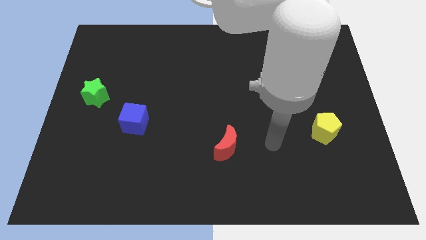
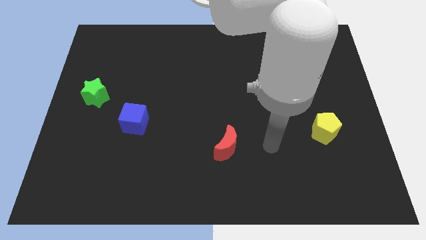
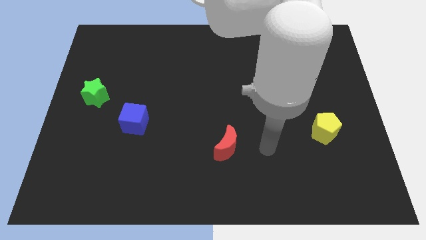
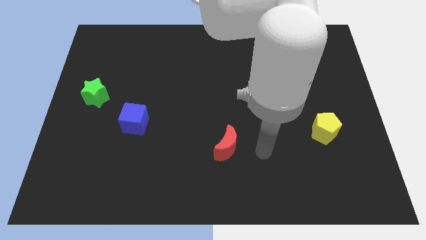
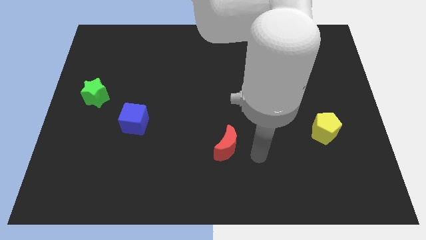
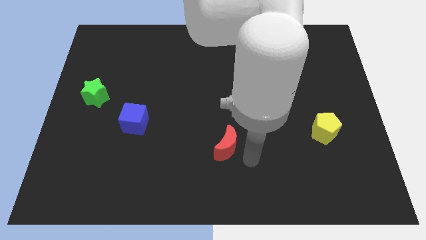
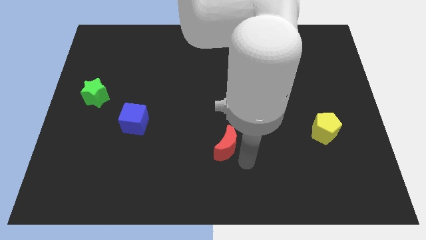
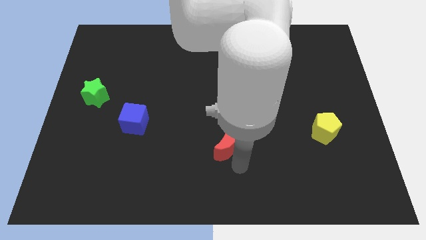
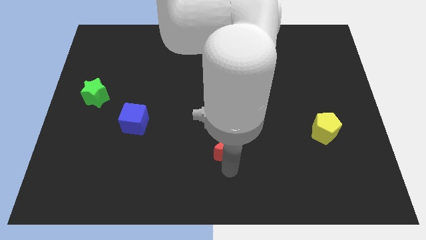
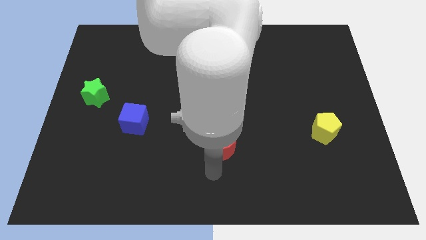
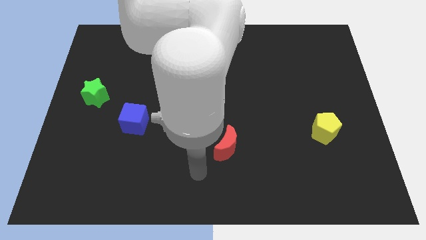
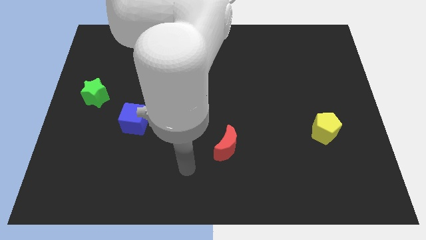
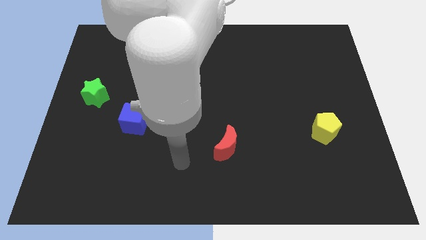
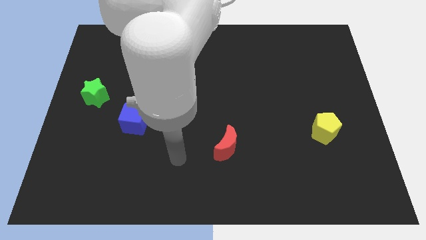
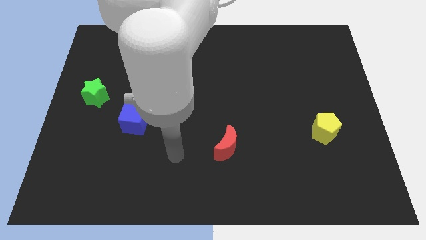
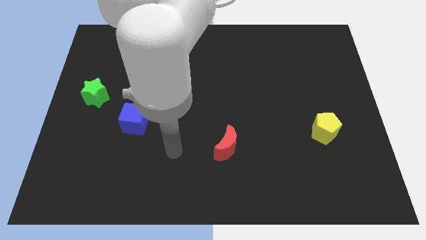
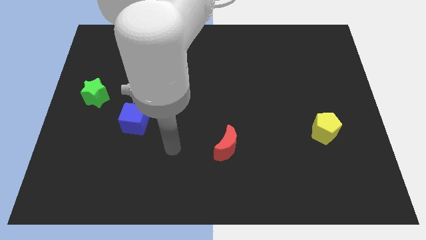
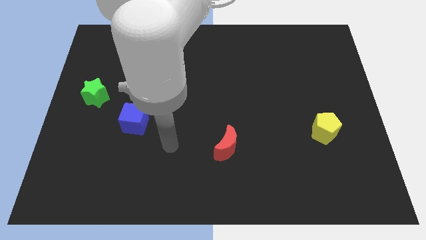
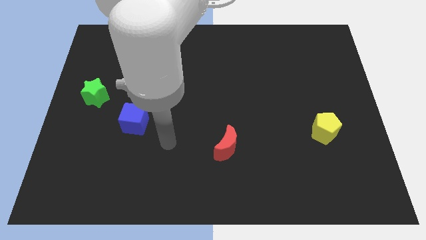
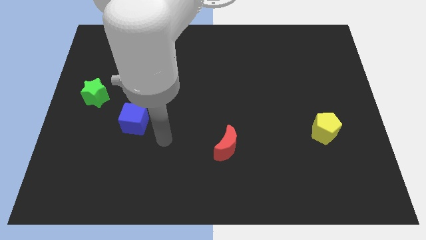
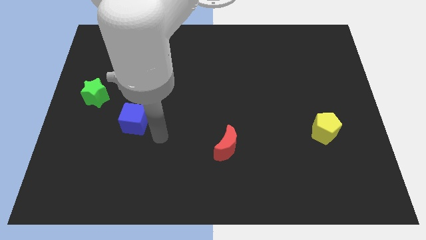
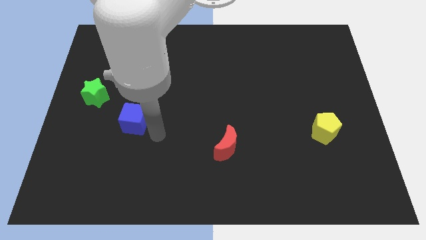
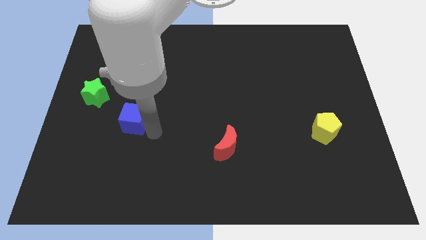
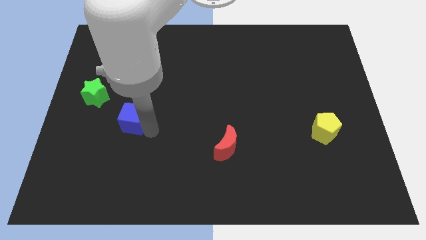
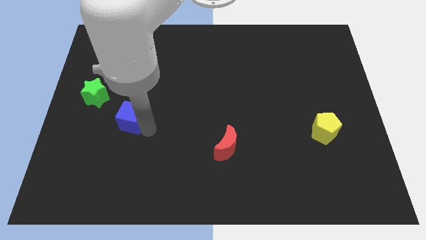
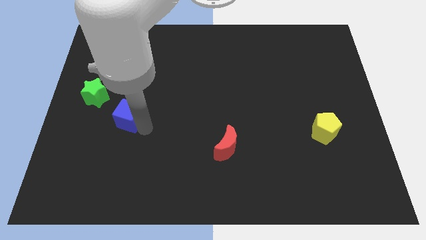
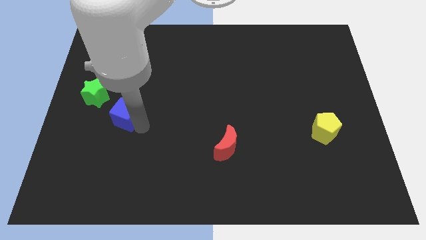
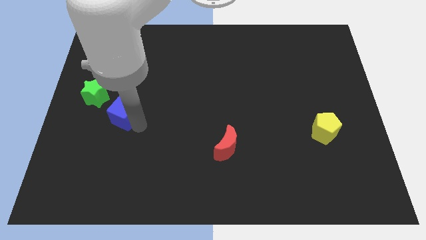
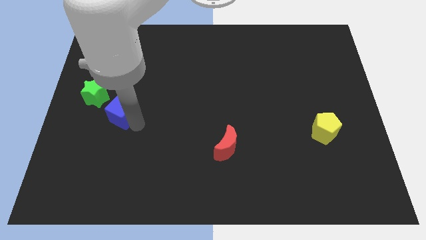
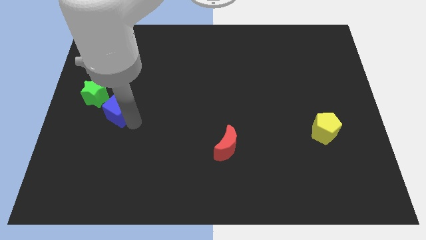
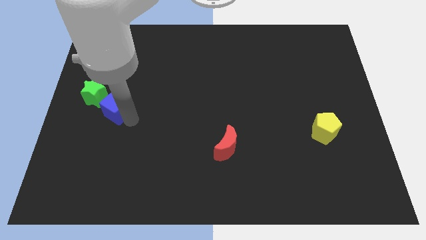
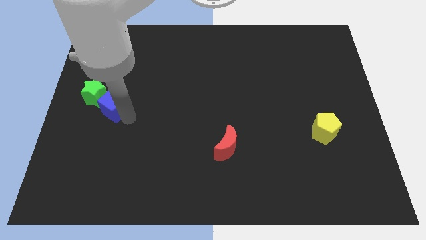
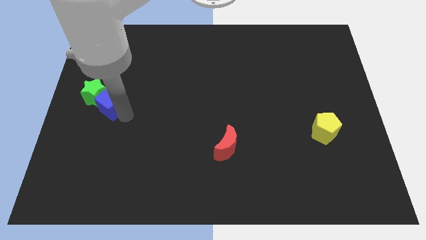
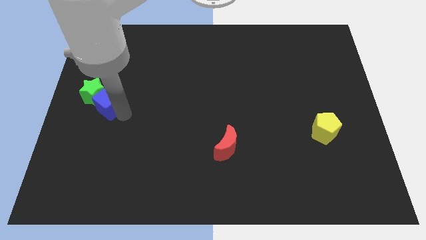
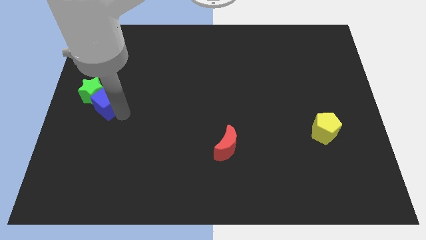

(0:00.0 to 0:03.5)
put the blue block to the star

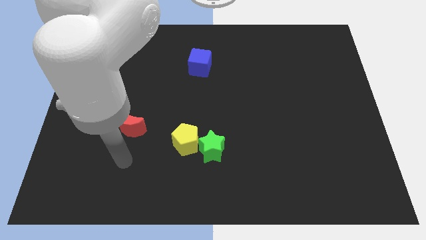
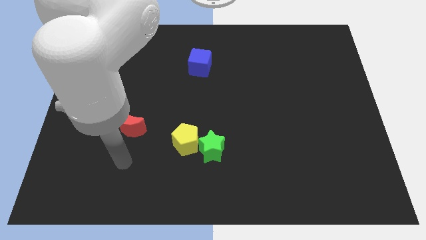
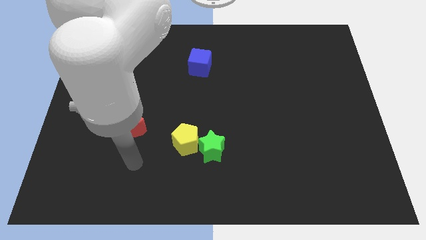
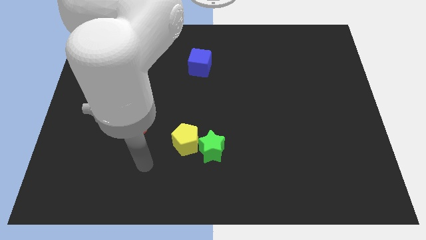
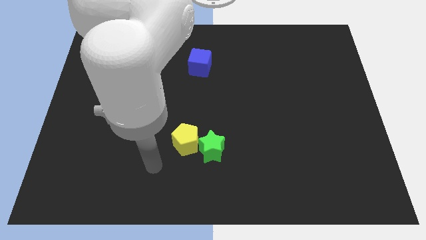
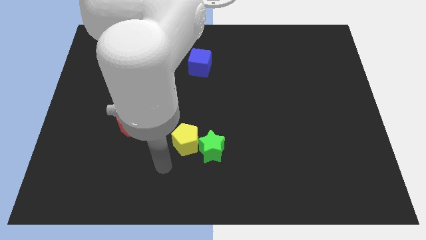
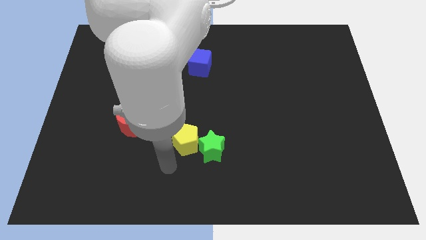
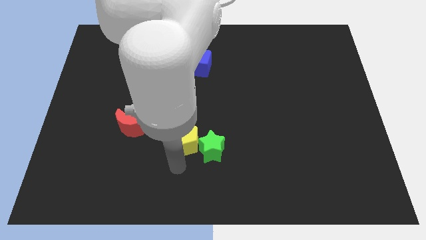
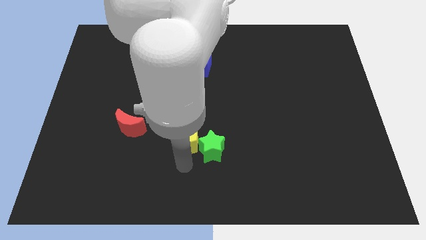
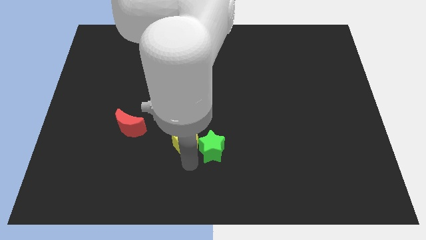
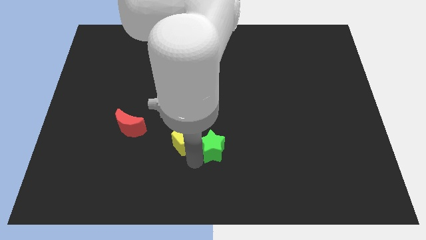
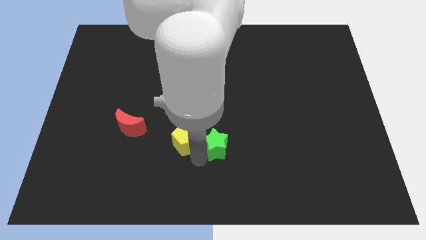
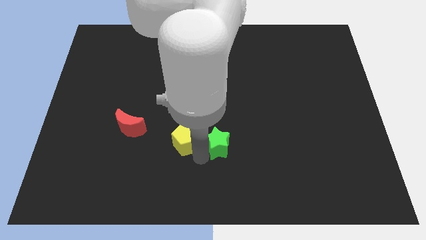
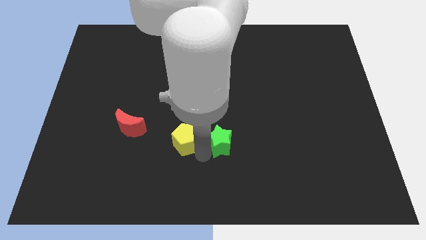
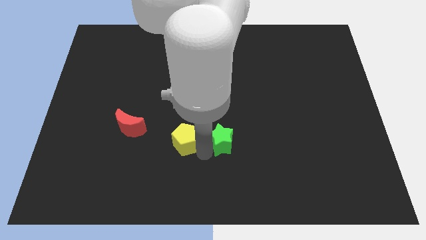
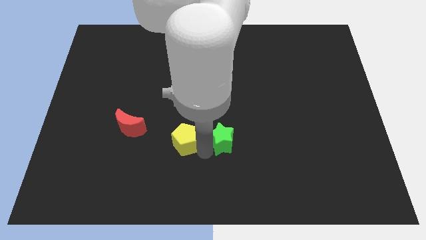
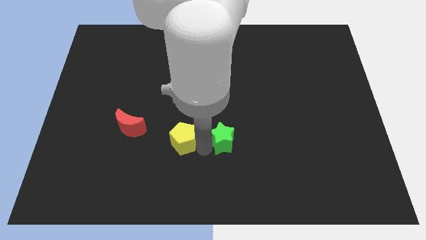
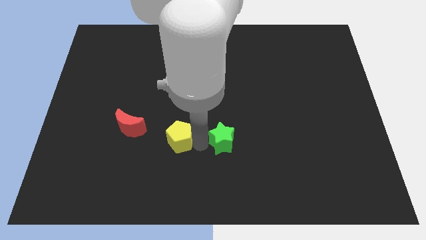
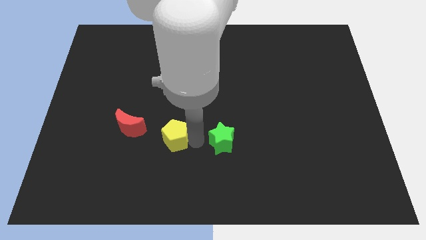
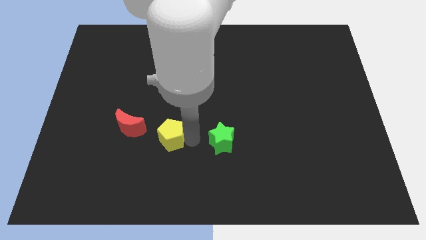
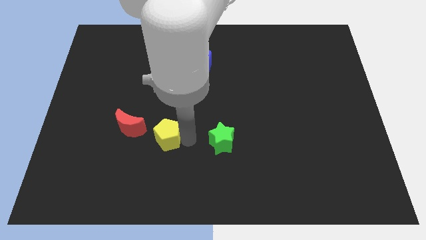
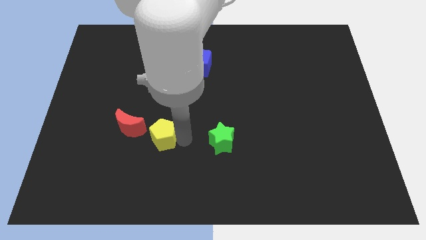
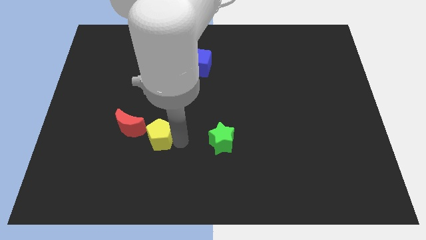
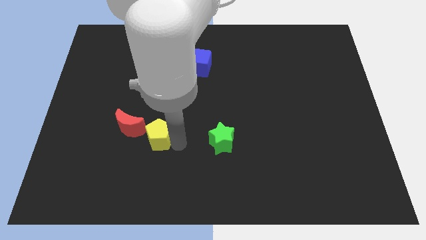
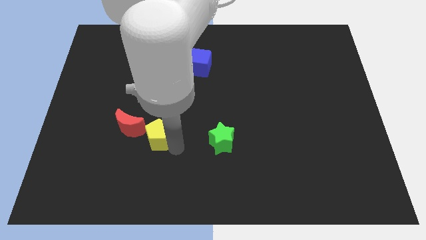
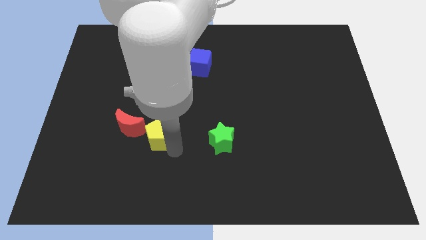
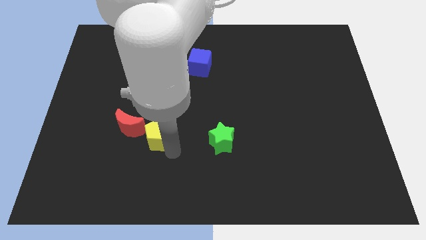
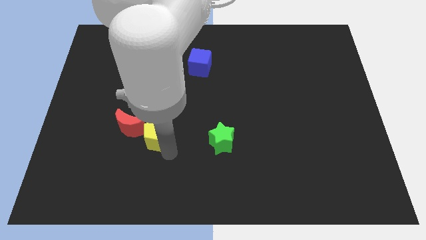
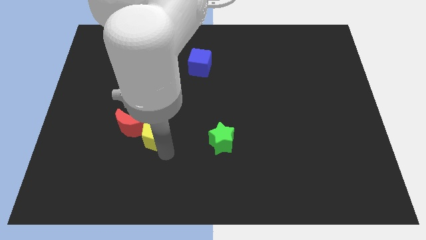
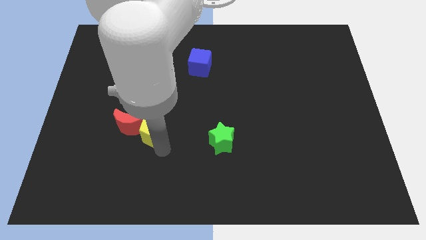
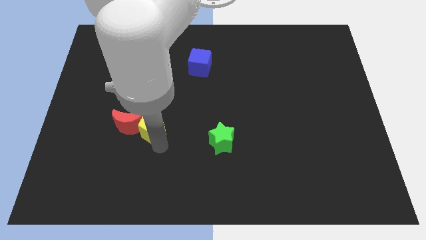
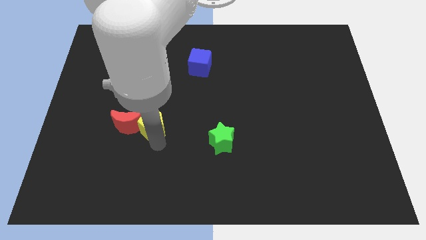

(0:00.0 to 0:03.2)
slide the pentagon next to the red moon

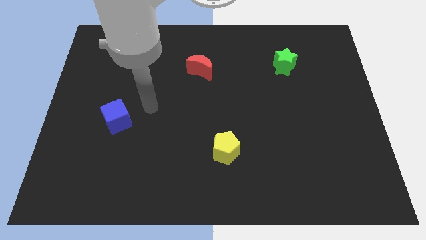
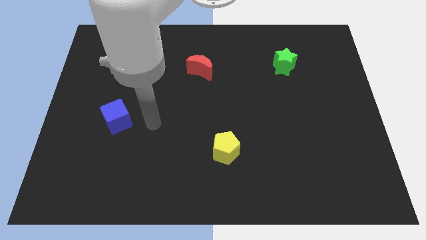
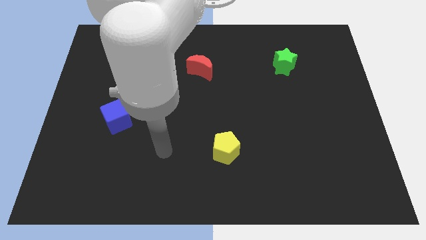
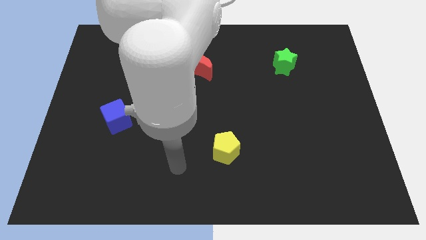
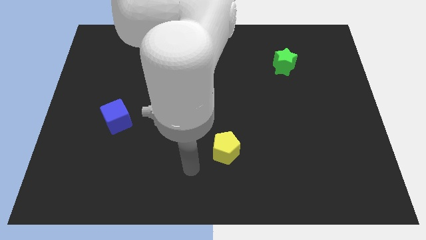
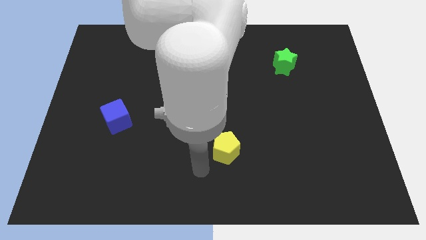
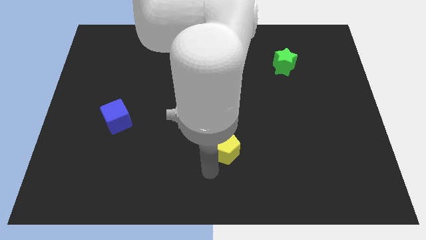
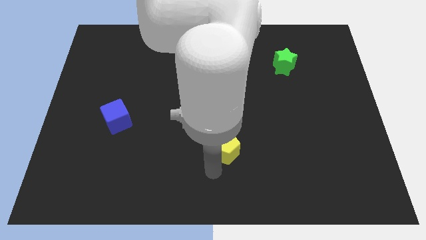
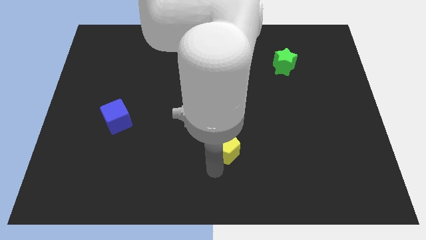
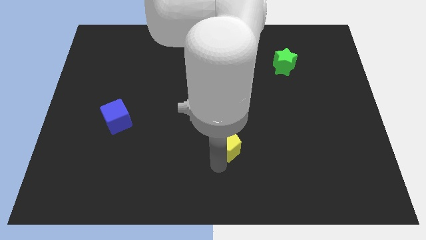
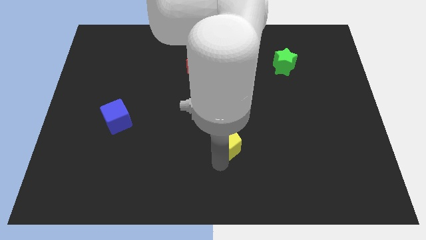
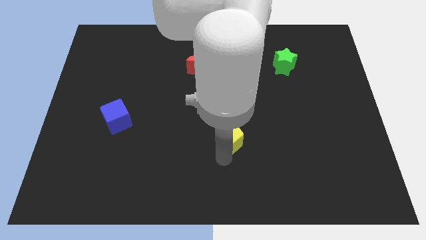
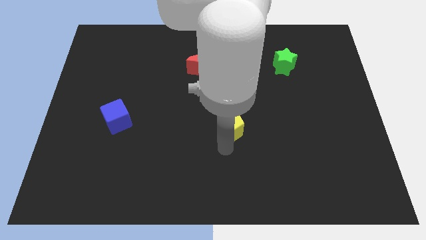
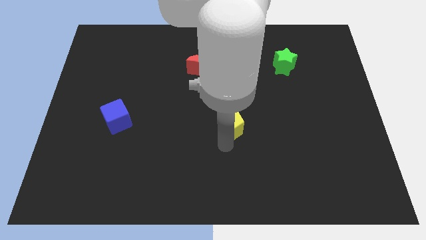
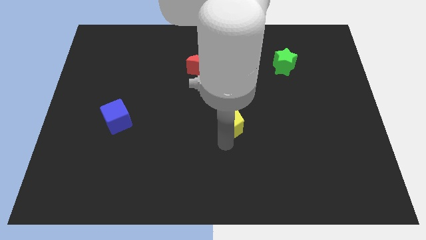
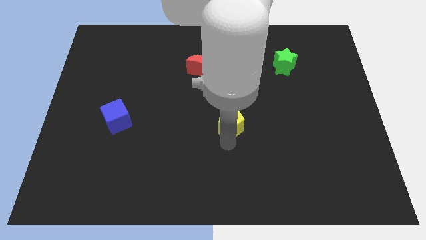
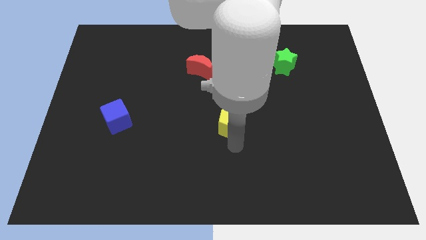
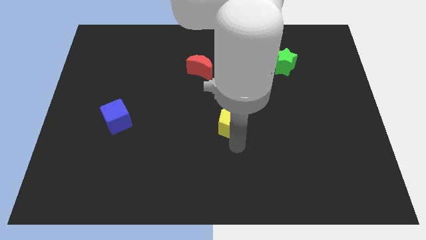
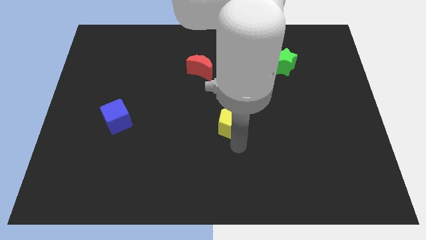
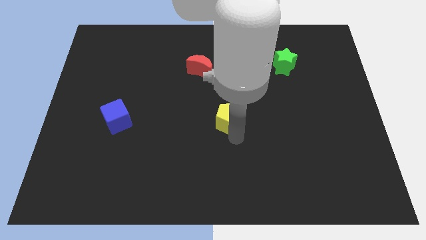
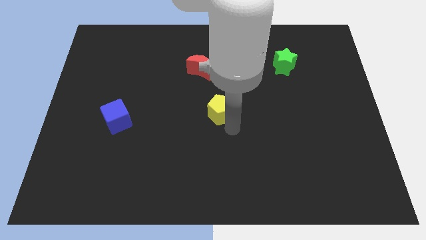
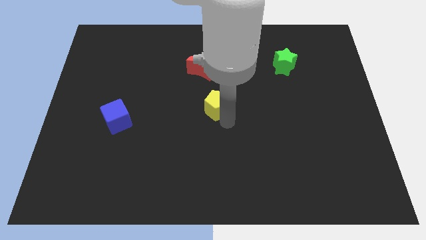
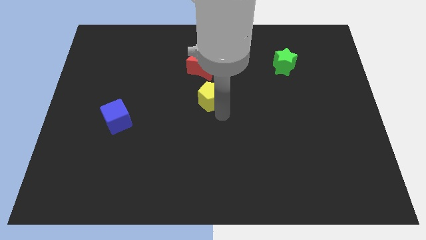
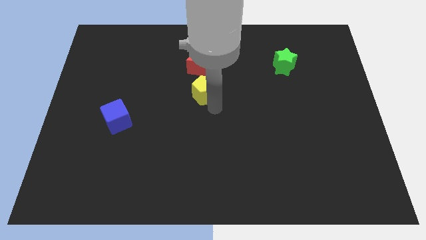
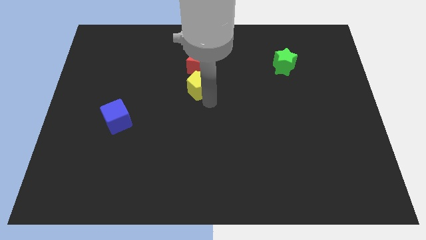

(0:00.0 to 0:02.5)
push the yellow block close to the red block
